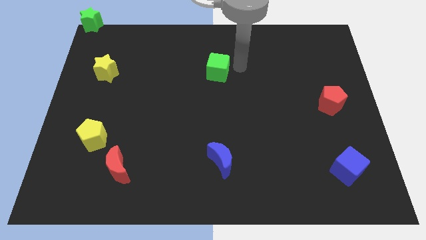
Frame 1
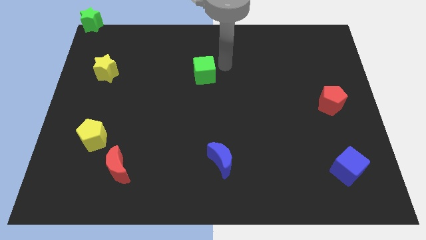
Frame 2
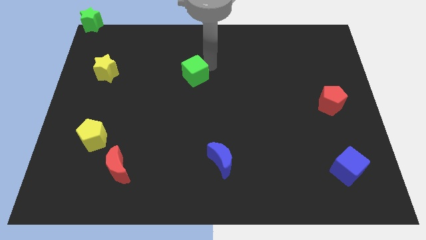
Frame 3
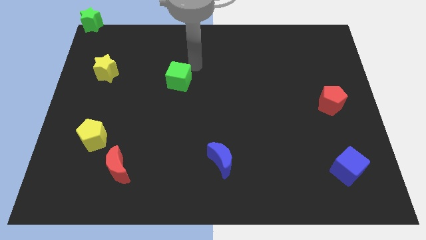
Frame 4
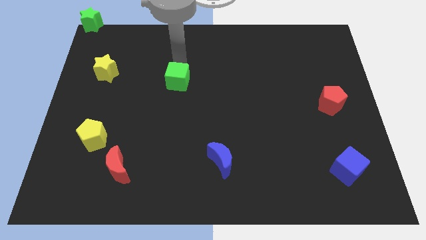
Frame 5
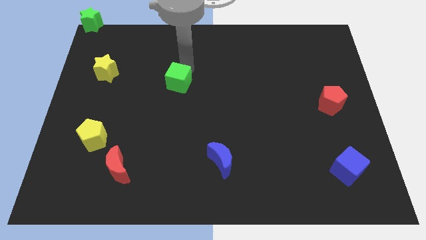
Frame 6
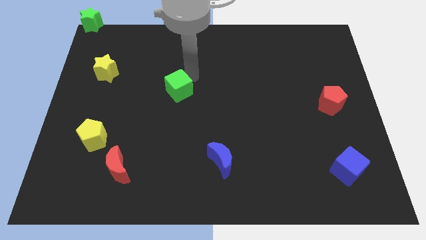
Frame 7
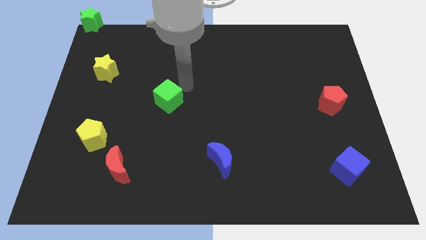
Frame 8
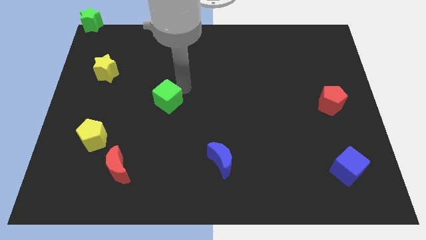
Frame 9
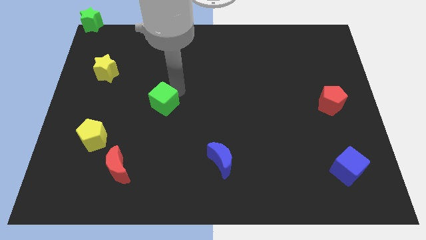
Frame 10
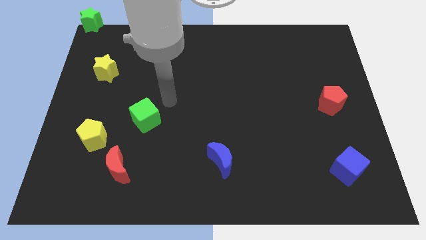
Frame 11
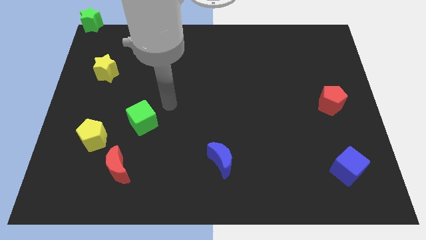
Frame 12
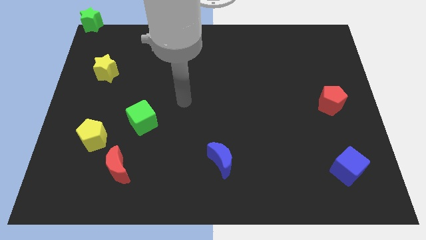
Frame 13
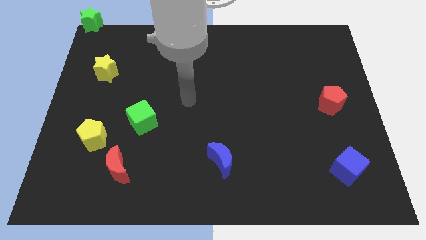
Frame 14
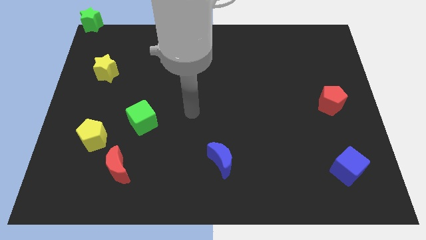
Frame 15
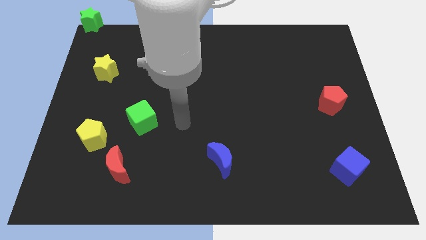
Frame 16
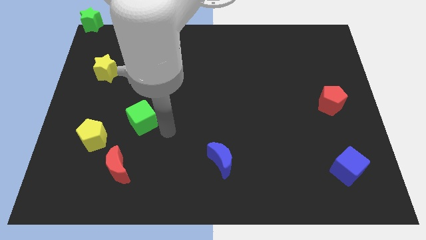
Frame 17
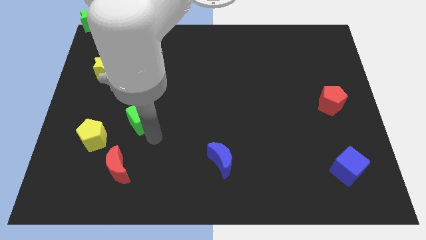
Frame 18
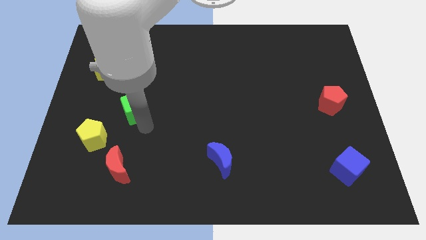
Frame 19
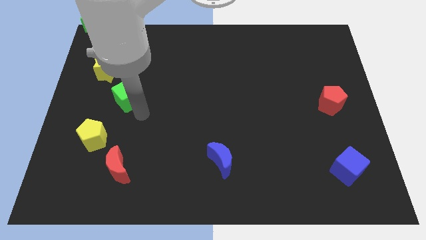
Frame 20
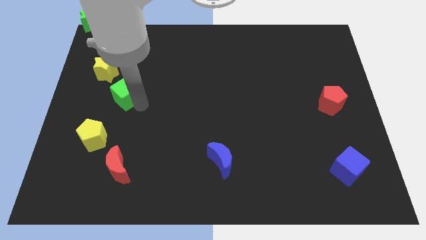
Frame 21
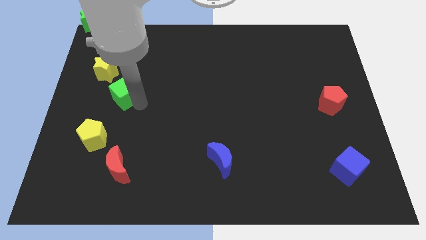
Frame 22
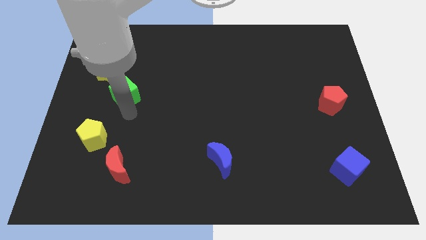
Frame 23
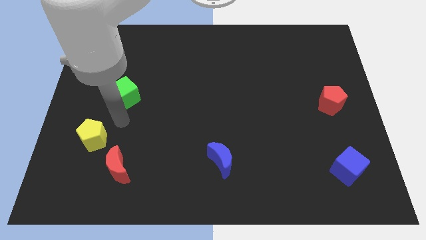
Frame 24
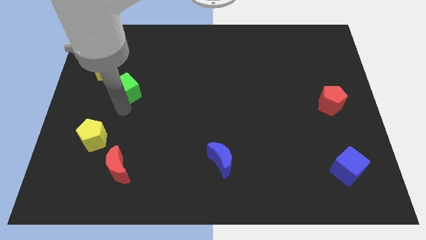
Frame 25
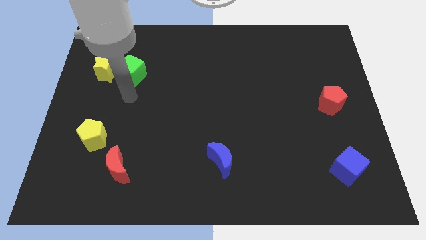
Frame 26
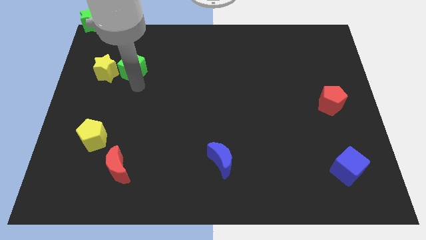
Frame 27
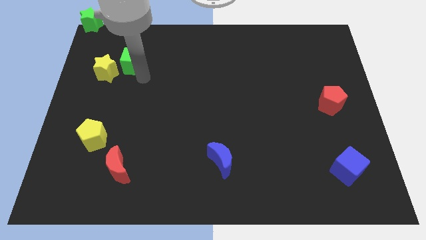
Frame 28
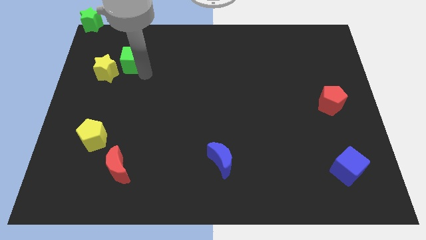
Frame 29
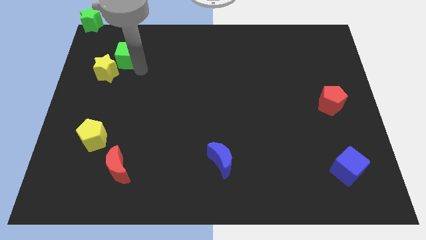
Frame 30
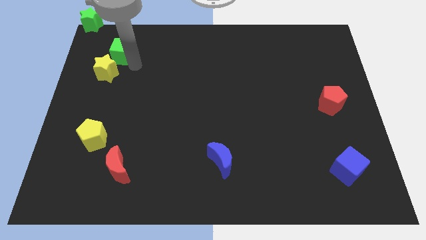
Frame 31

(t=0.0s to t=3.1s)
place the green cube at the top right side of yellow star

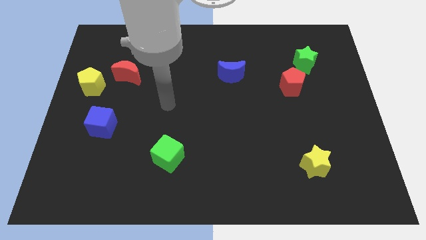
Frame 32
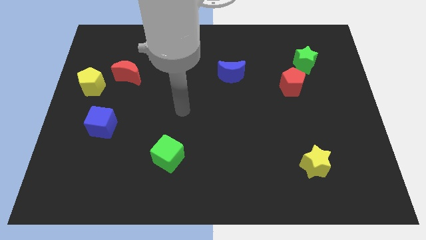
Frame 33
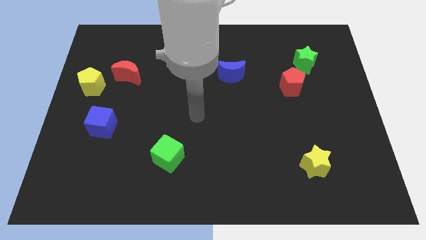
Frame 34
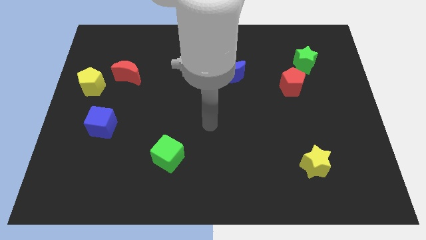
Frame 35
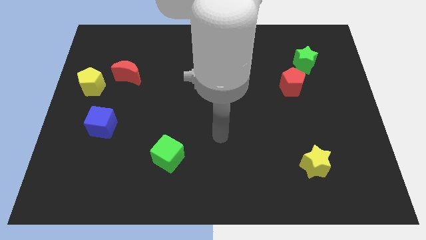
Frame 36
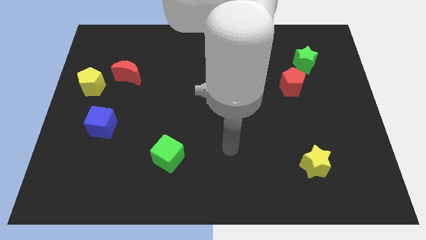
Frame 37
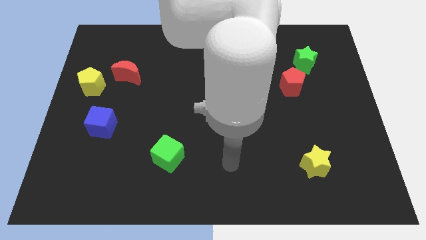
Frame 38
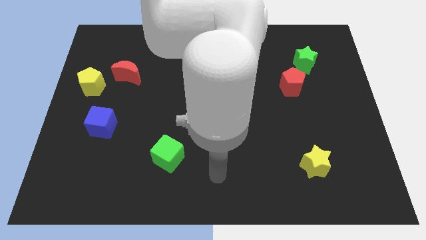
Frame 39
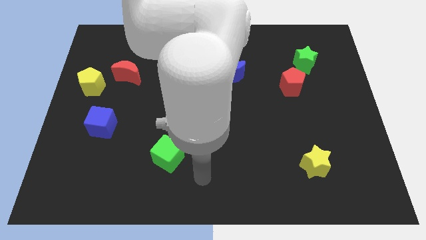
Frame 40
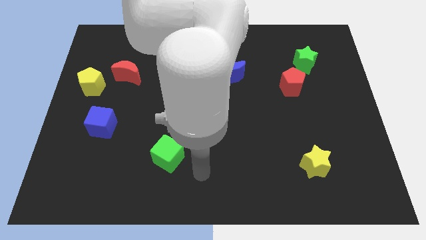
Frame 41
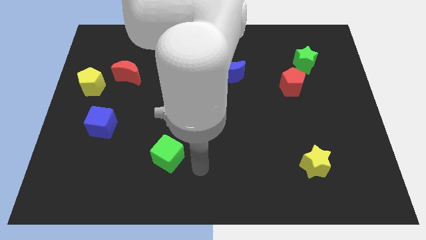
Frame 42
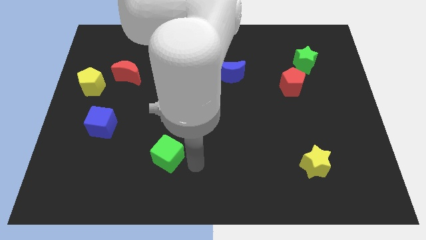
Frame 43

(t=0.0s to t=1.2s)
move your arm to the right side of the green cube

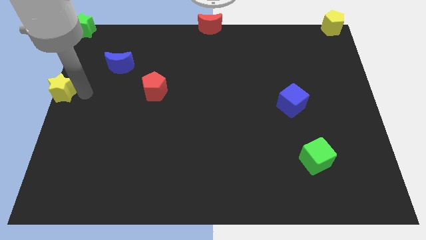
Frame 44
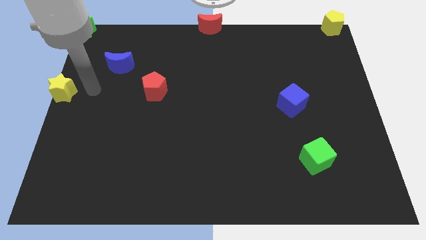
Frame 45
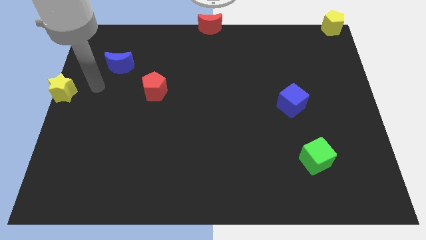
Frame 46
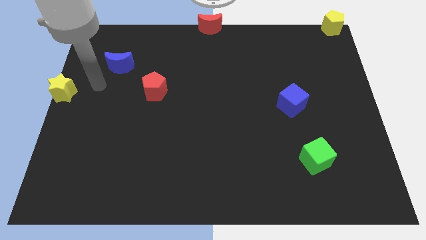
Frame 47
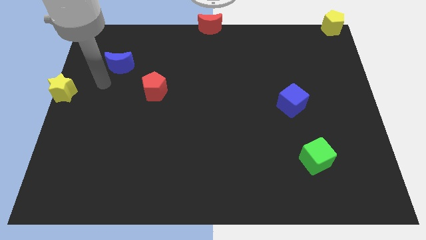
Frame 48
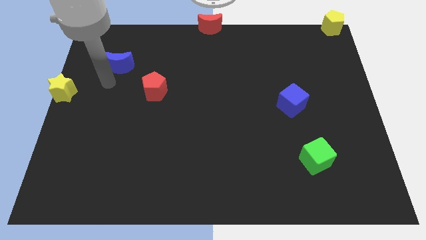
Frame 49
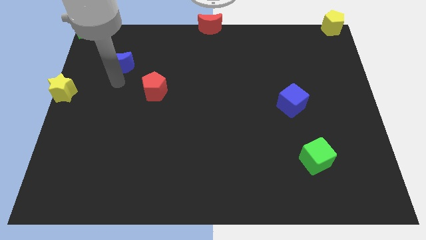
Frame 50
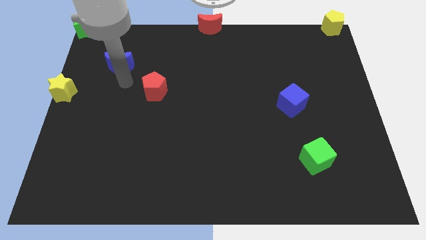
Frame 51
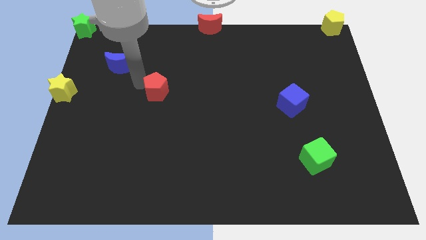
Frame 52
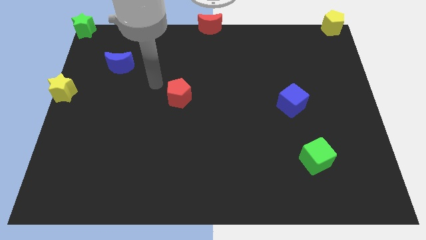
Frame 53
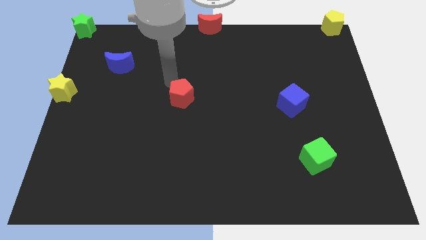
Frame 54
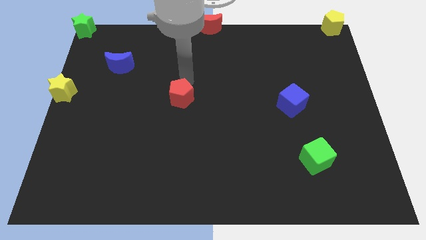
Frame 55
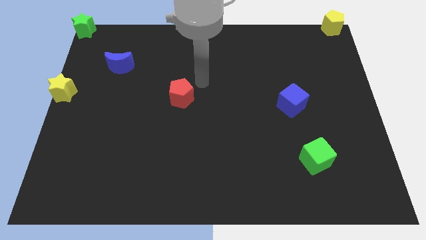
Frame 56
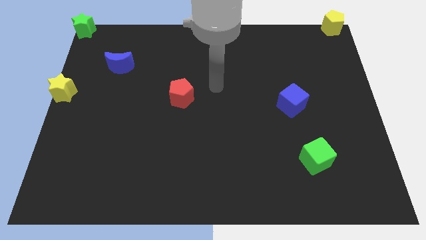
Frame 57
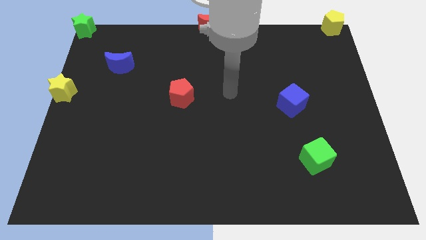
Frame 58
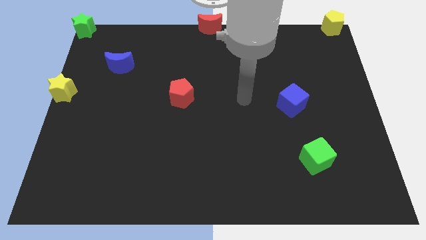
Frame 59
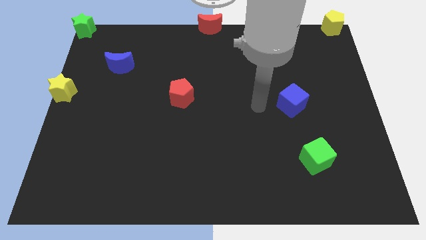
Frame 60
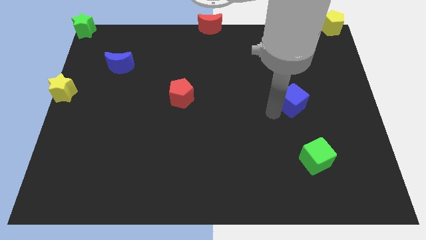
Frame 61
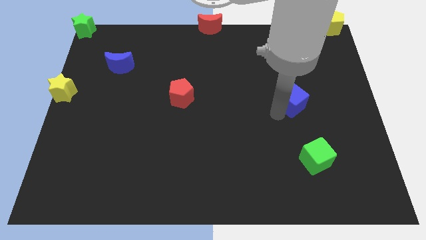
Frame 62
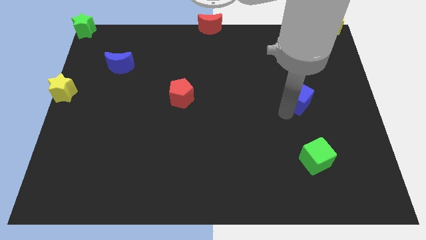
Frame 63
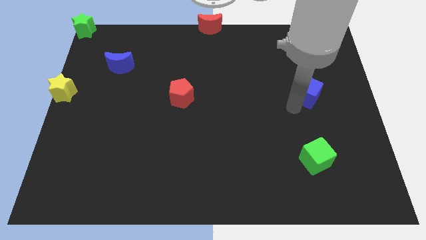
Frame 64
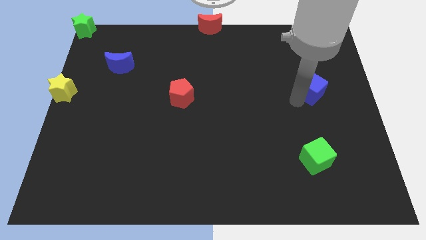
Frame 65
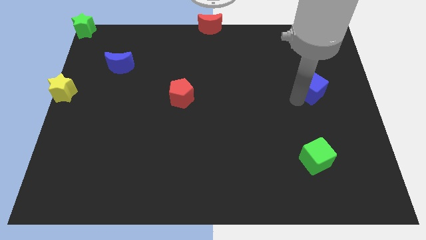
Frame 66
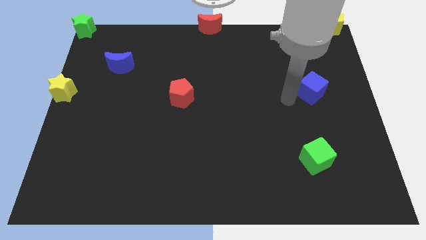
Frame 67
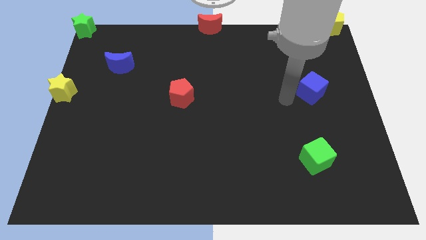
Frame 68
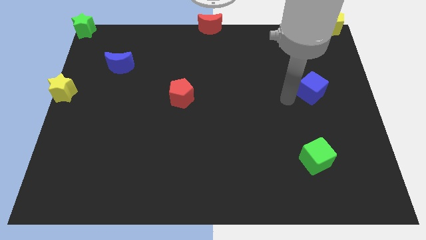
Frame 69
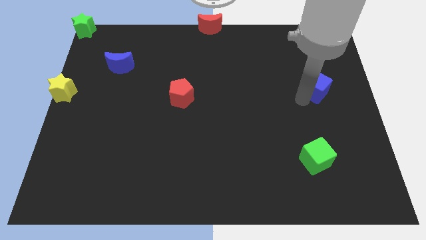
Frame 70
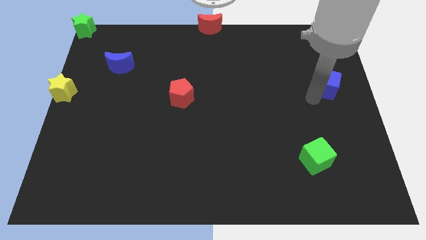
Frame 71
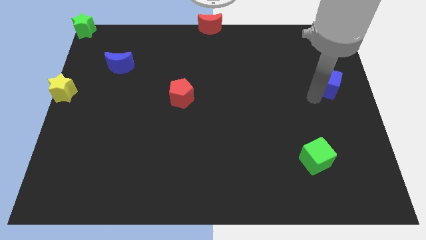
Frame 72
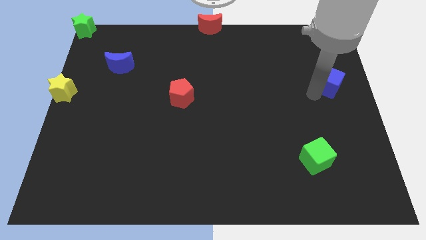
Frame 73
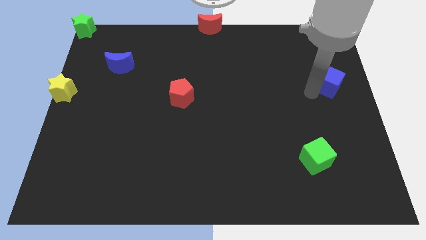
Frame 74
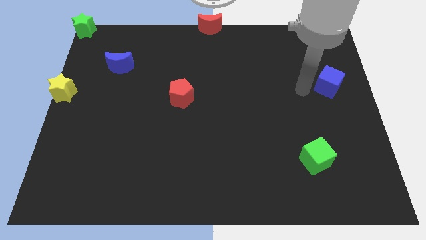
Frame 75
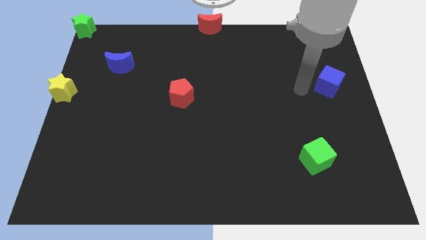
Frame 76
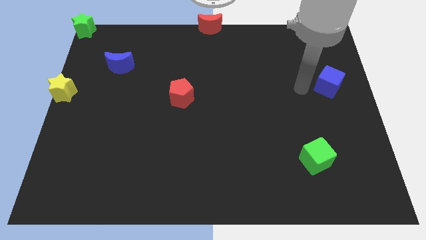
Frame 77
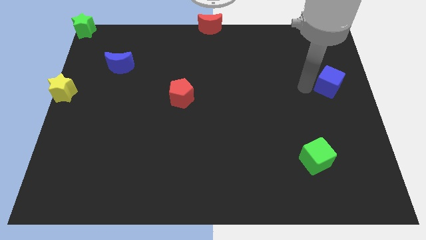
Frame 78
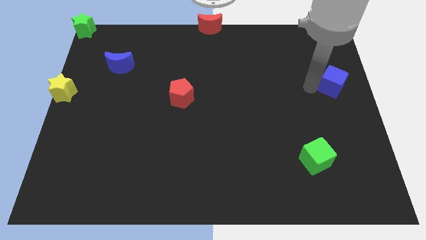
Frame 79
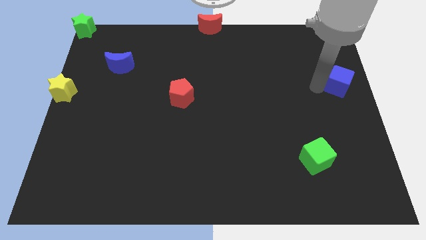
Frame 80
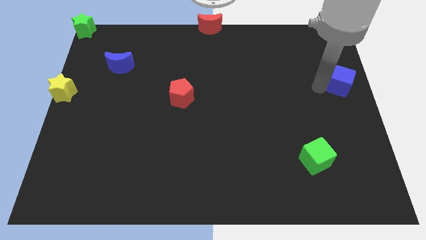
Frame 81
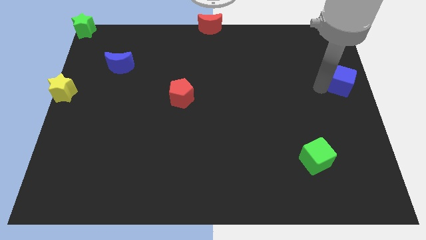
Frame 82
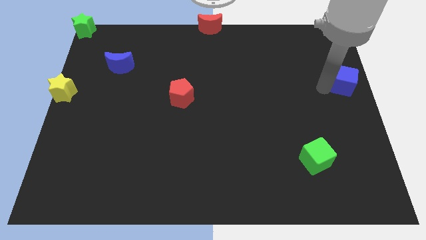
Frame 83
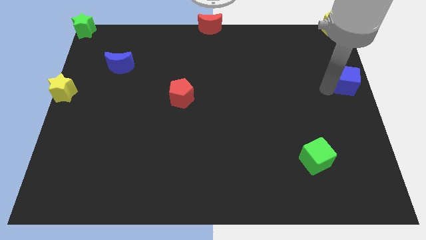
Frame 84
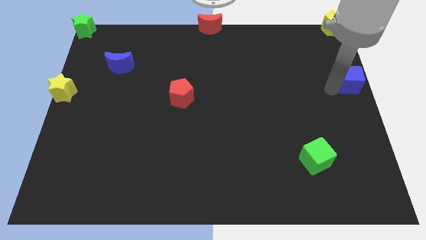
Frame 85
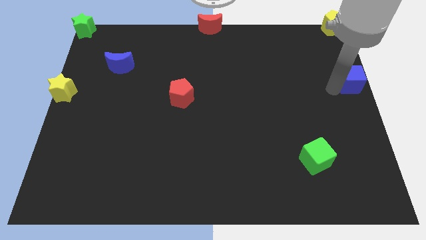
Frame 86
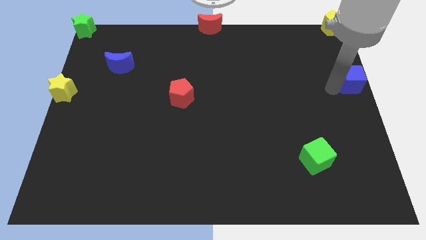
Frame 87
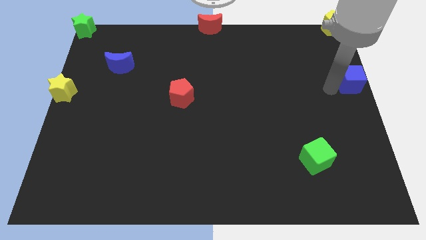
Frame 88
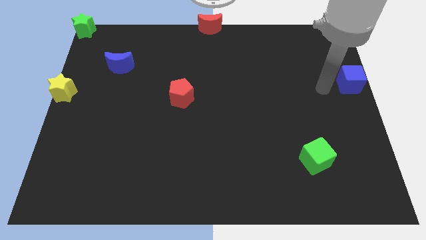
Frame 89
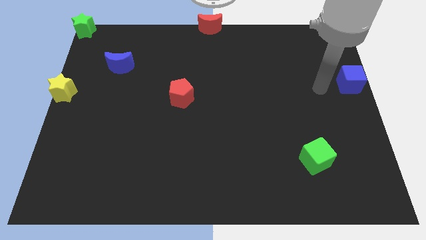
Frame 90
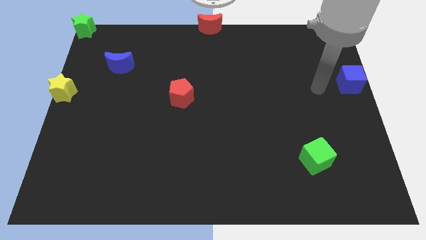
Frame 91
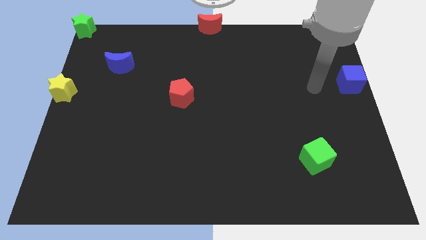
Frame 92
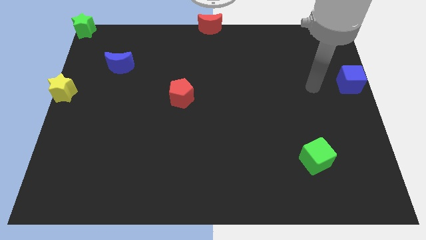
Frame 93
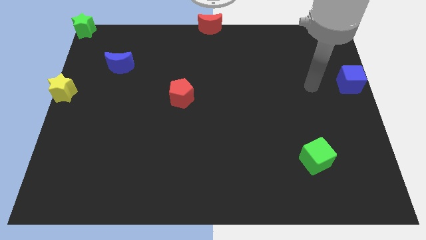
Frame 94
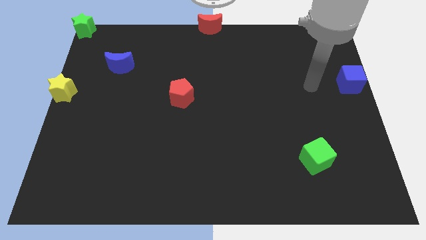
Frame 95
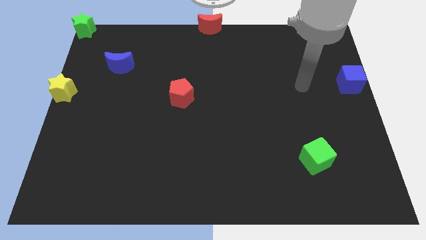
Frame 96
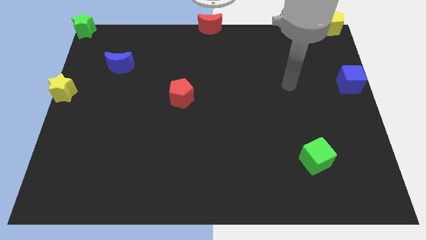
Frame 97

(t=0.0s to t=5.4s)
move blue cube to the right centre of the board
